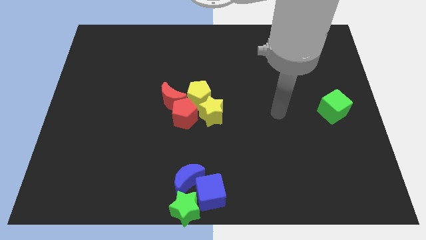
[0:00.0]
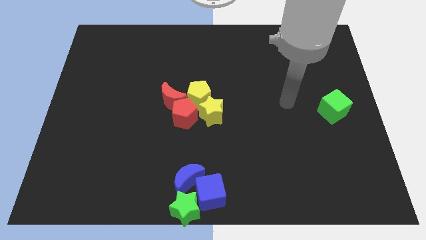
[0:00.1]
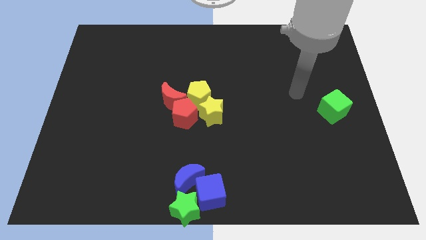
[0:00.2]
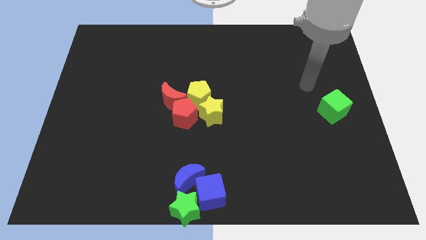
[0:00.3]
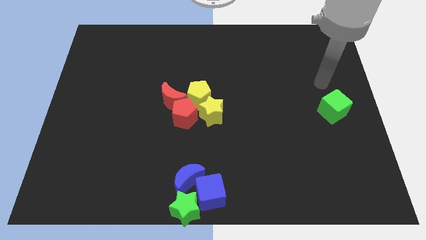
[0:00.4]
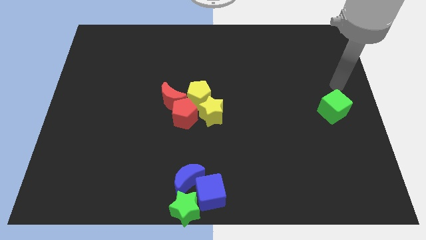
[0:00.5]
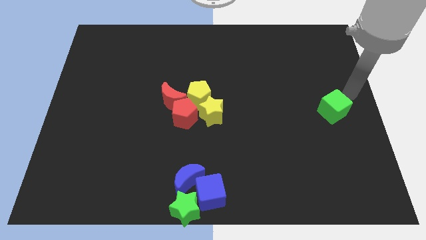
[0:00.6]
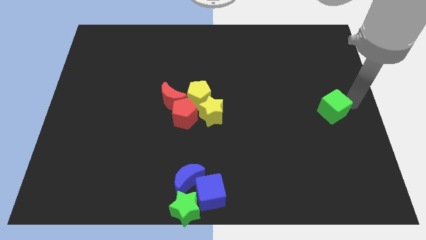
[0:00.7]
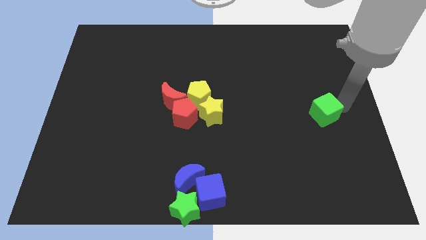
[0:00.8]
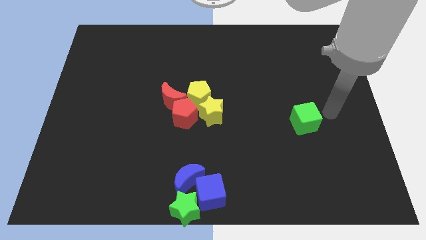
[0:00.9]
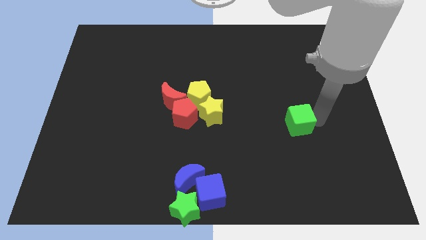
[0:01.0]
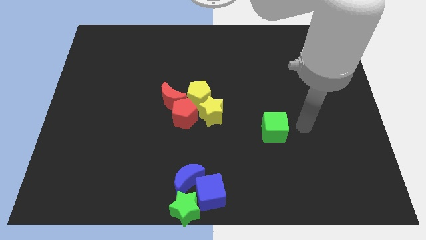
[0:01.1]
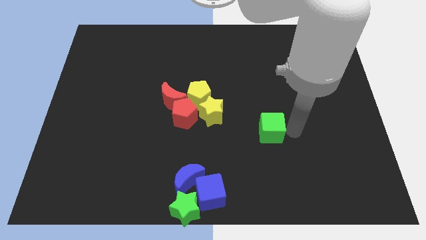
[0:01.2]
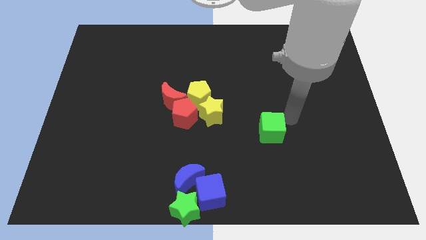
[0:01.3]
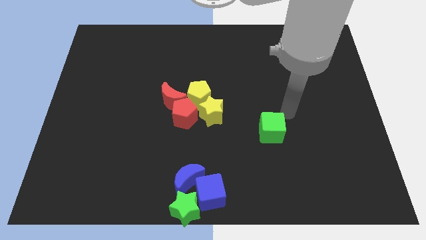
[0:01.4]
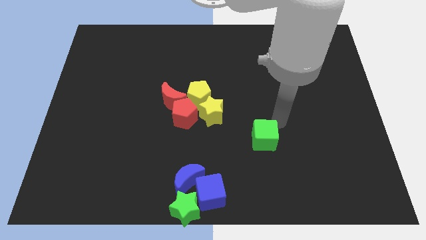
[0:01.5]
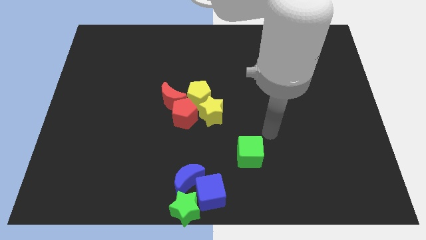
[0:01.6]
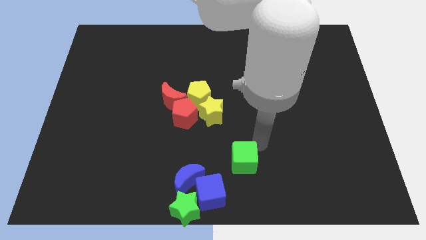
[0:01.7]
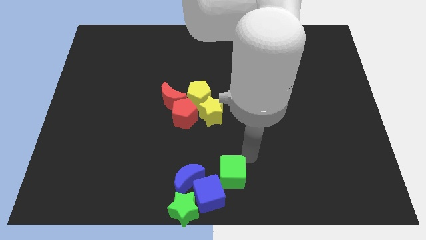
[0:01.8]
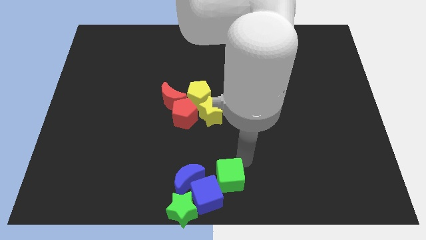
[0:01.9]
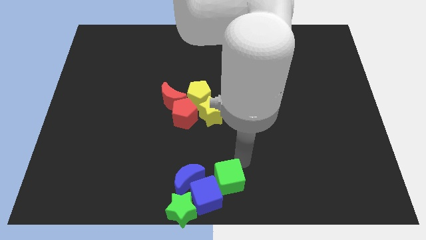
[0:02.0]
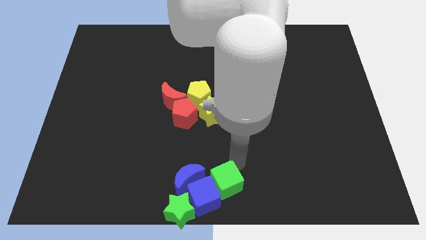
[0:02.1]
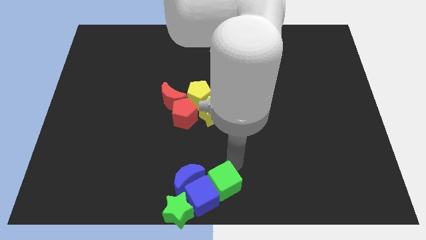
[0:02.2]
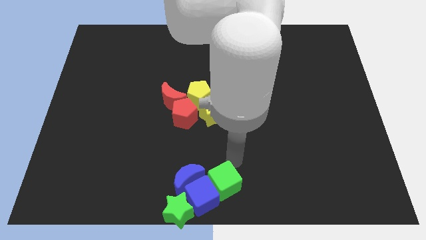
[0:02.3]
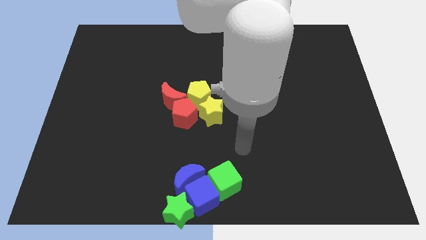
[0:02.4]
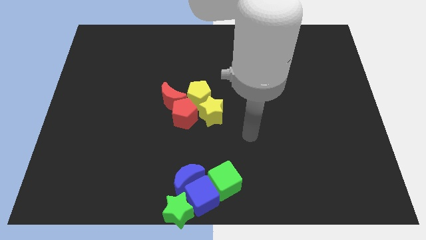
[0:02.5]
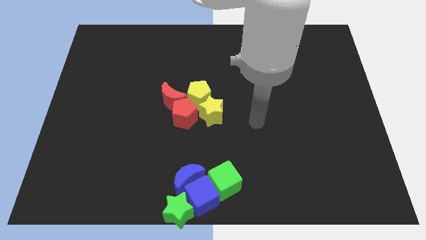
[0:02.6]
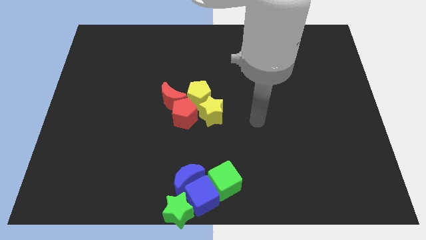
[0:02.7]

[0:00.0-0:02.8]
move the green cube into the blue cube

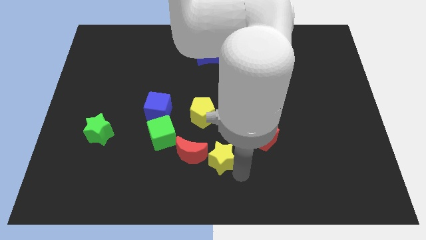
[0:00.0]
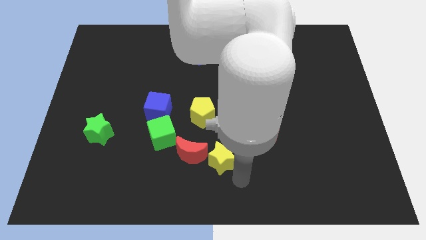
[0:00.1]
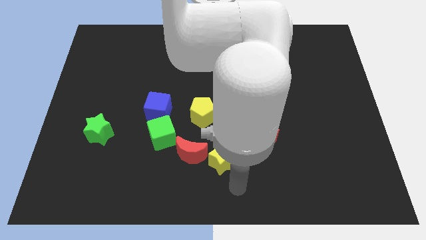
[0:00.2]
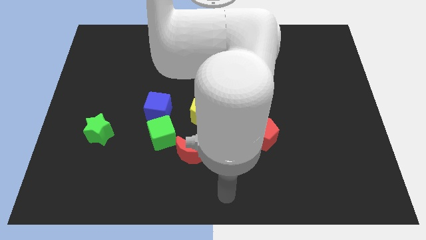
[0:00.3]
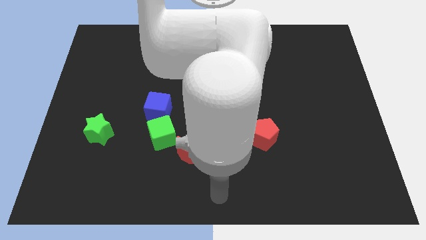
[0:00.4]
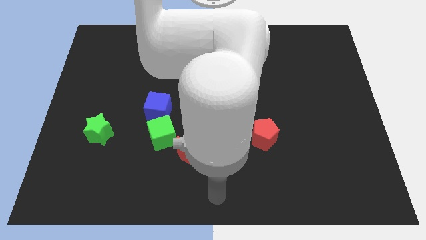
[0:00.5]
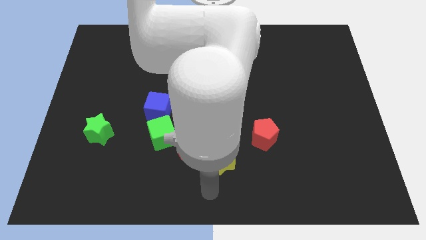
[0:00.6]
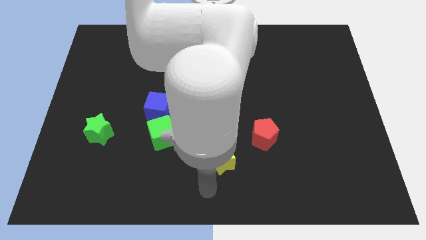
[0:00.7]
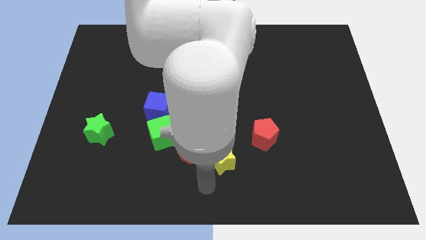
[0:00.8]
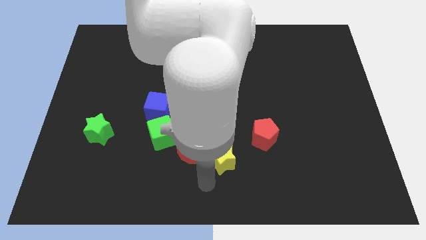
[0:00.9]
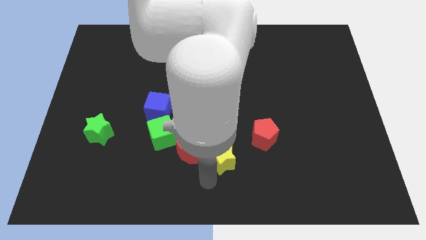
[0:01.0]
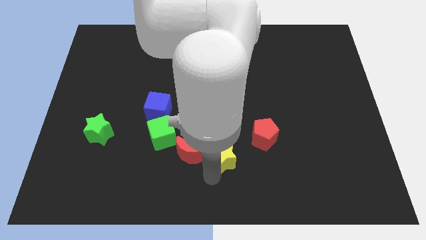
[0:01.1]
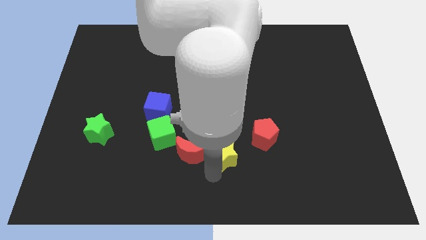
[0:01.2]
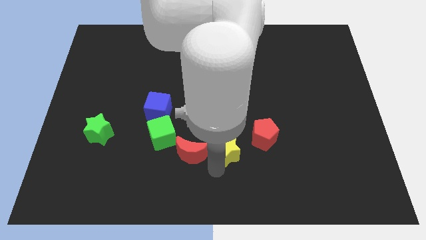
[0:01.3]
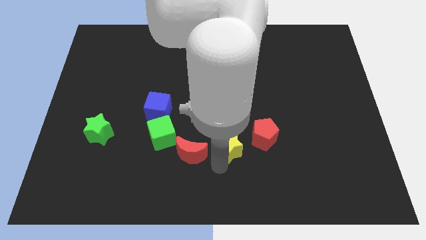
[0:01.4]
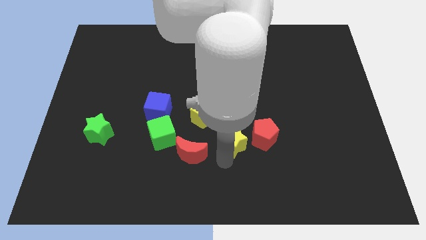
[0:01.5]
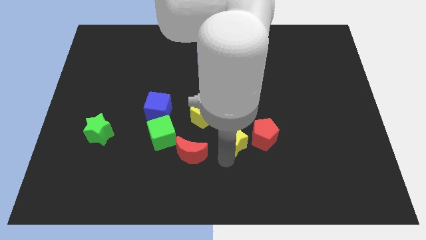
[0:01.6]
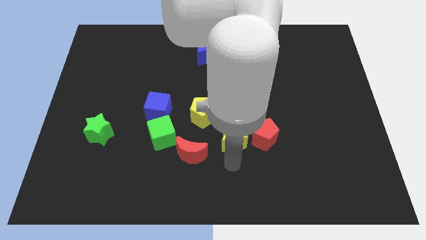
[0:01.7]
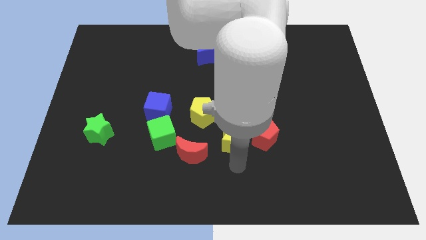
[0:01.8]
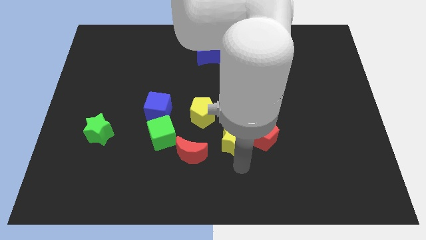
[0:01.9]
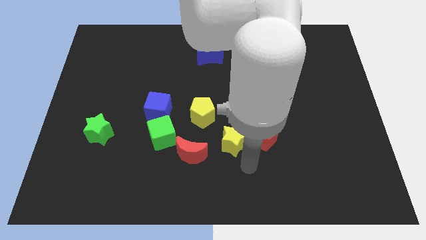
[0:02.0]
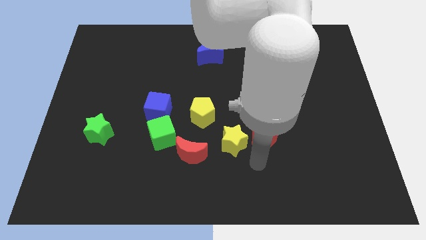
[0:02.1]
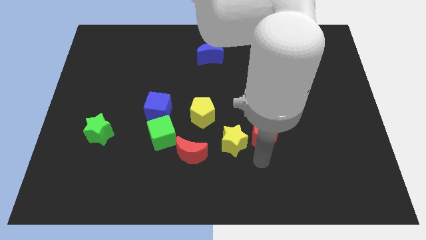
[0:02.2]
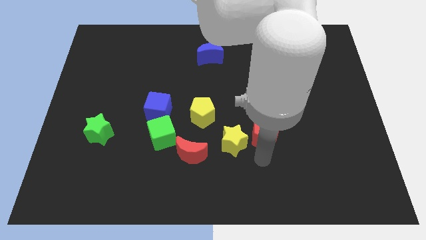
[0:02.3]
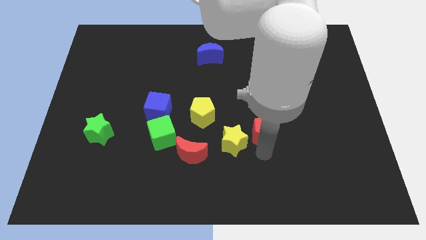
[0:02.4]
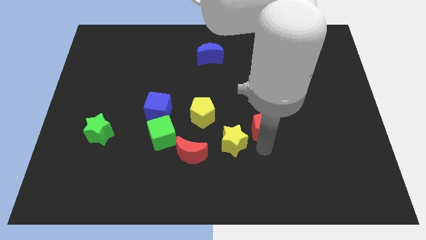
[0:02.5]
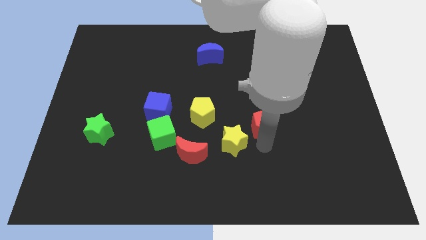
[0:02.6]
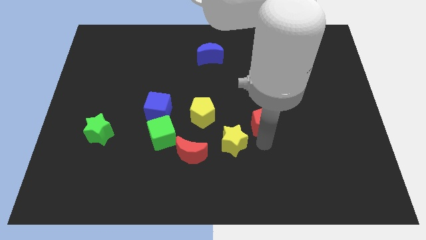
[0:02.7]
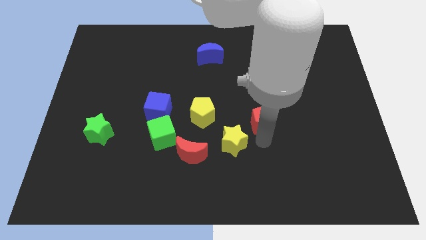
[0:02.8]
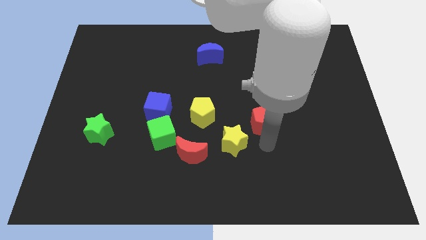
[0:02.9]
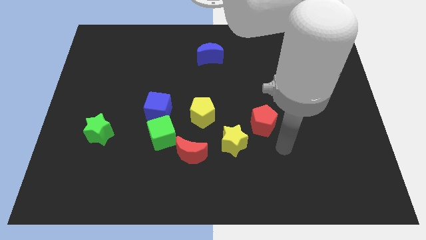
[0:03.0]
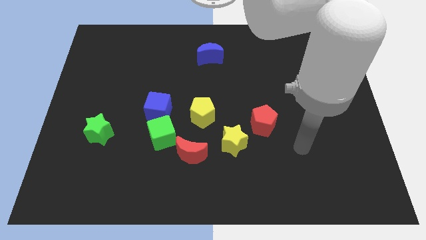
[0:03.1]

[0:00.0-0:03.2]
form a diagonal line with red blocks and the yellow star

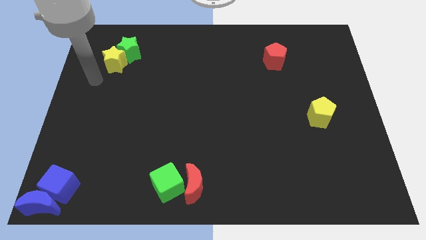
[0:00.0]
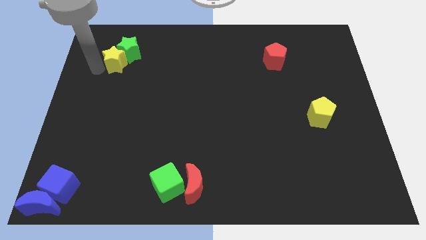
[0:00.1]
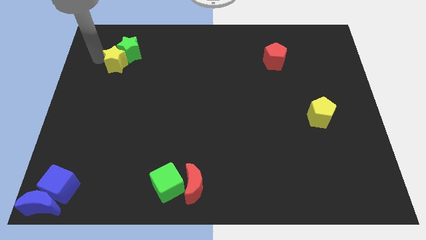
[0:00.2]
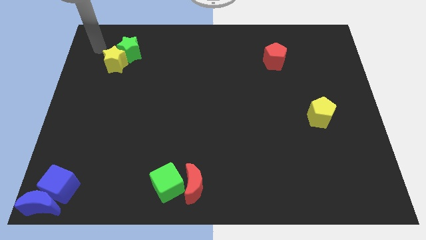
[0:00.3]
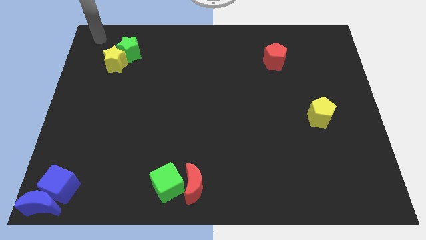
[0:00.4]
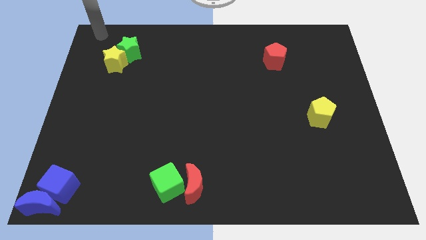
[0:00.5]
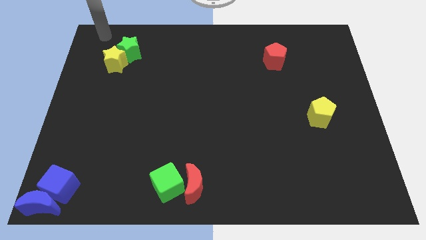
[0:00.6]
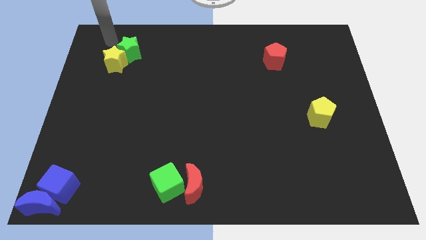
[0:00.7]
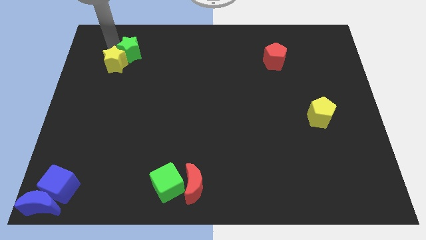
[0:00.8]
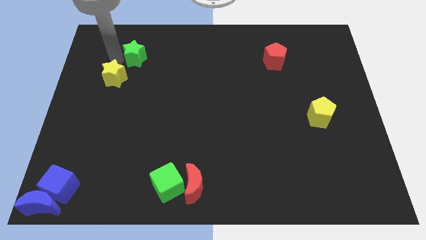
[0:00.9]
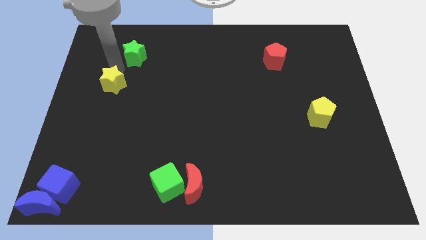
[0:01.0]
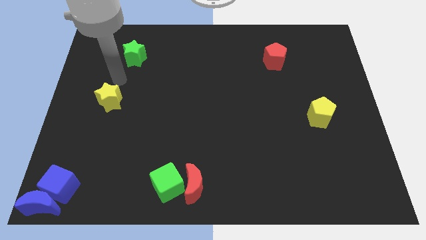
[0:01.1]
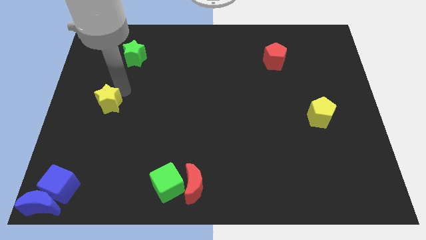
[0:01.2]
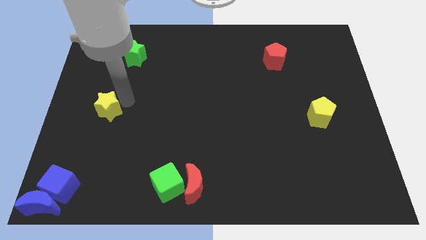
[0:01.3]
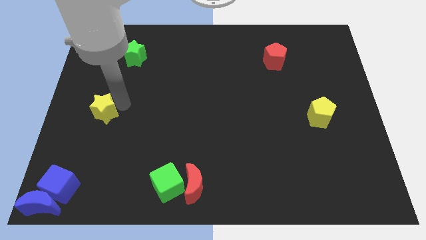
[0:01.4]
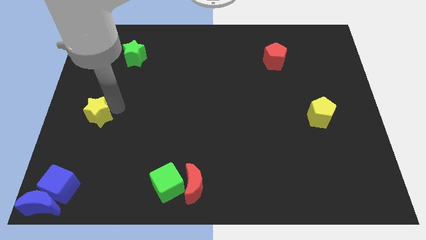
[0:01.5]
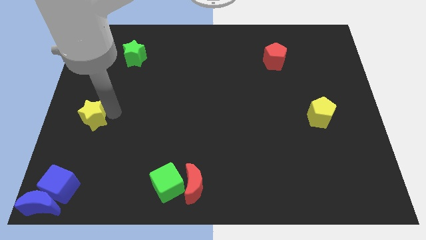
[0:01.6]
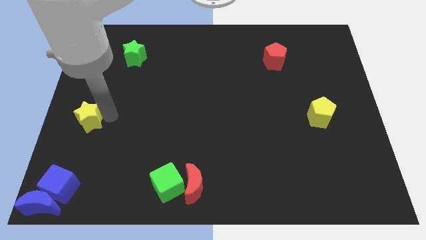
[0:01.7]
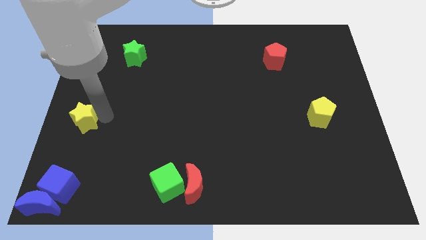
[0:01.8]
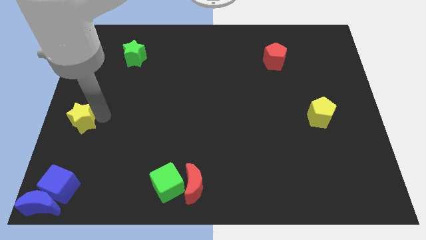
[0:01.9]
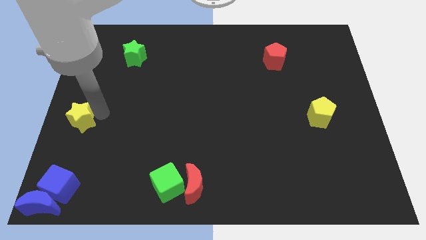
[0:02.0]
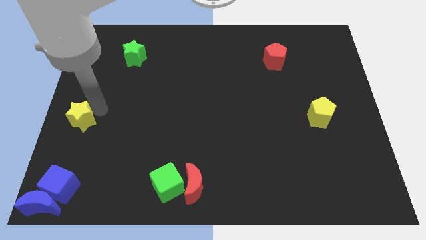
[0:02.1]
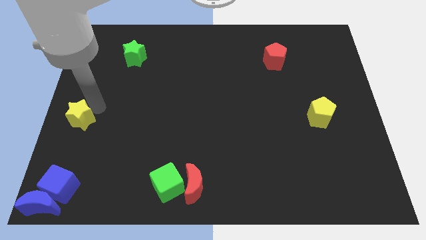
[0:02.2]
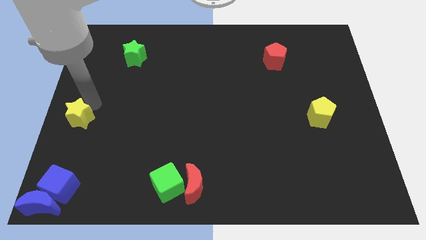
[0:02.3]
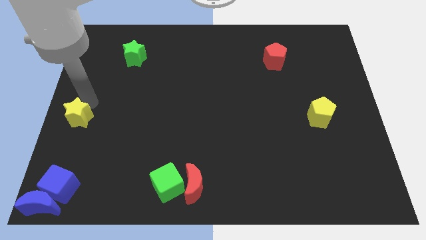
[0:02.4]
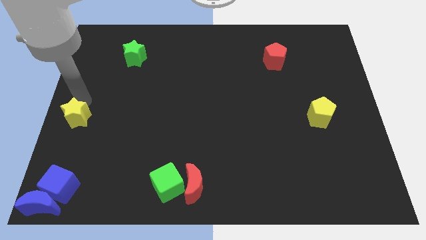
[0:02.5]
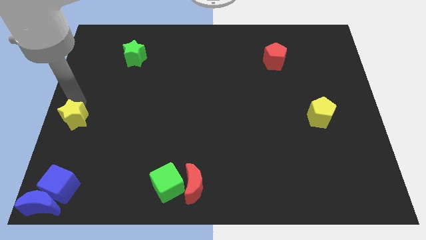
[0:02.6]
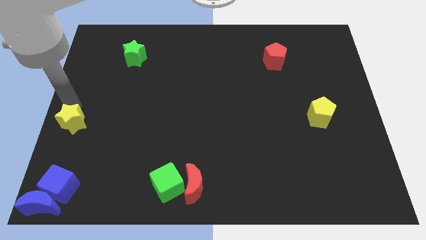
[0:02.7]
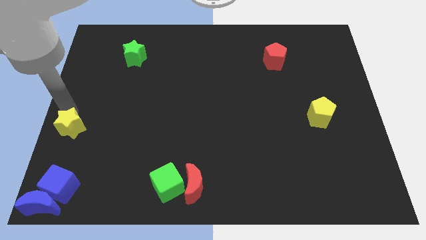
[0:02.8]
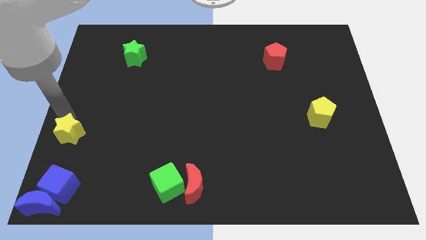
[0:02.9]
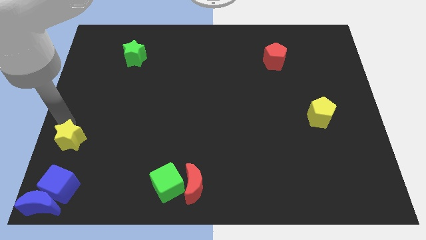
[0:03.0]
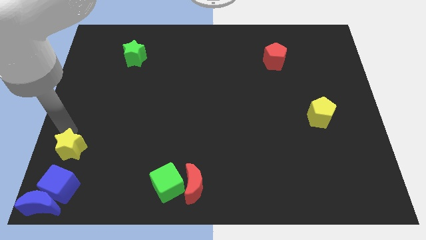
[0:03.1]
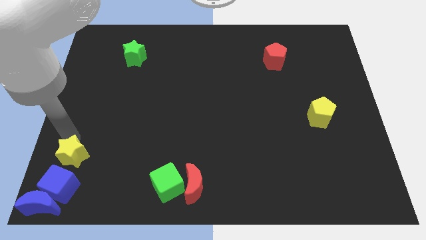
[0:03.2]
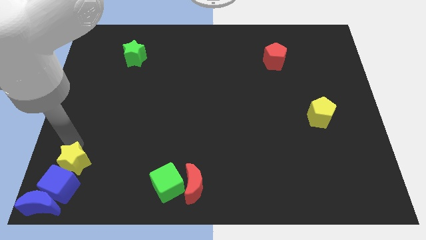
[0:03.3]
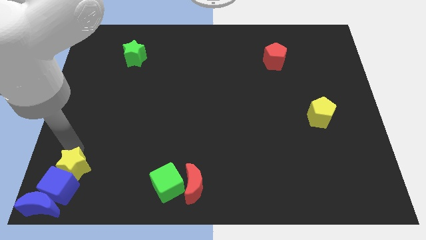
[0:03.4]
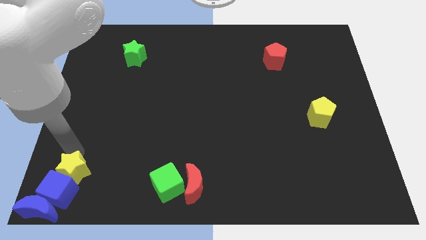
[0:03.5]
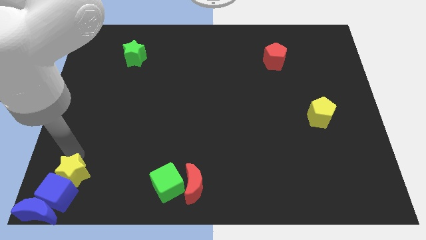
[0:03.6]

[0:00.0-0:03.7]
move the yellow star to the top of the blue cube
